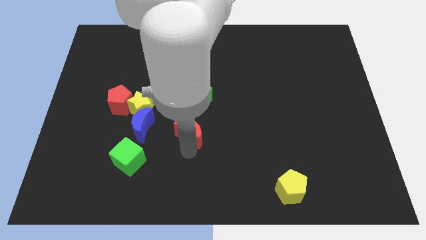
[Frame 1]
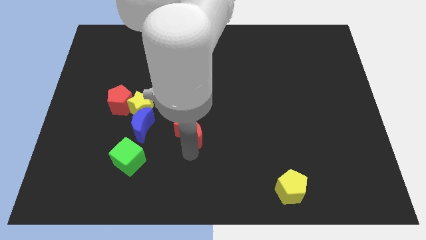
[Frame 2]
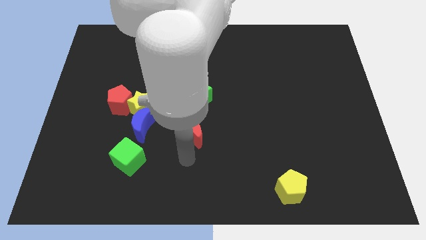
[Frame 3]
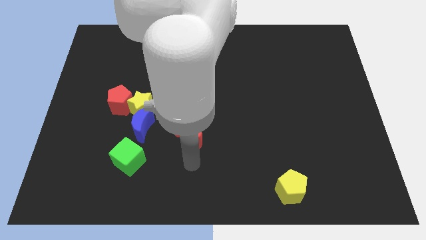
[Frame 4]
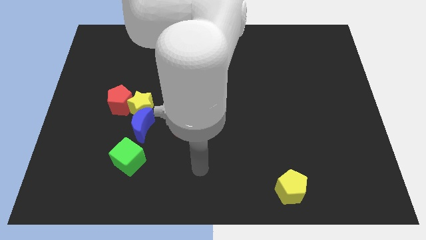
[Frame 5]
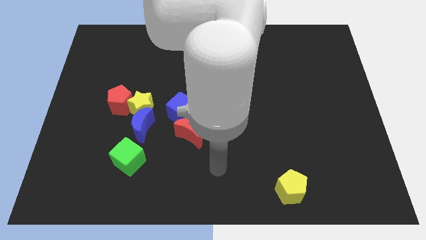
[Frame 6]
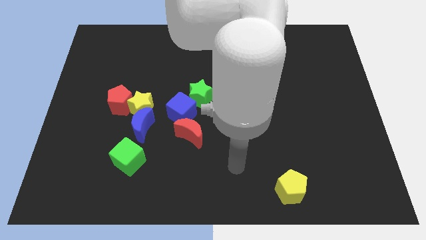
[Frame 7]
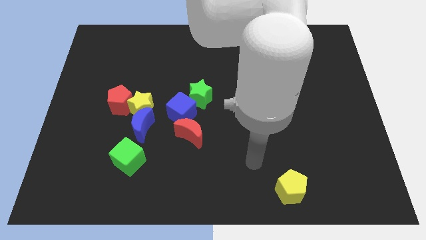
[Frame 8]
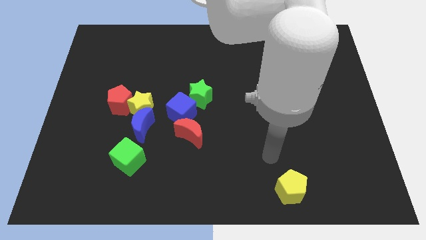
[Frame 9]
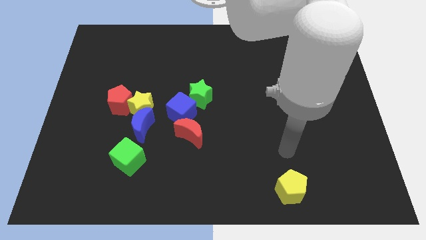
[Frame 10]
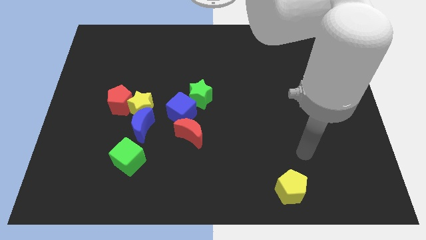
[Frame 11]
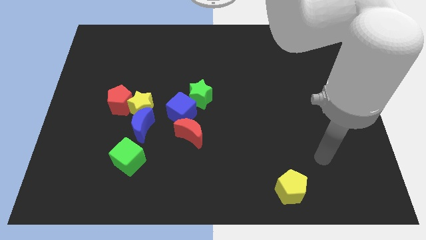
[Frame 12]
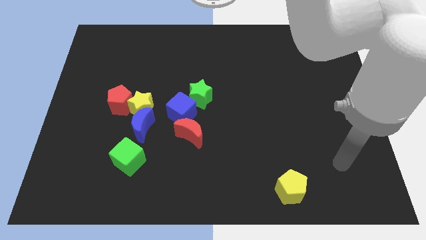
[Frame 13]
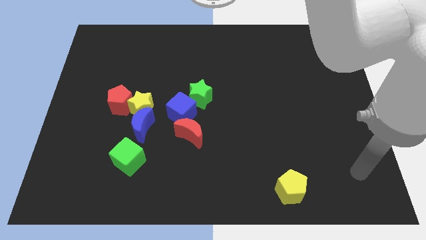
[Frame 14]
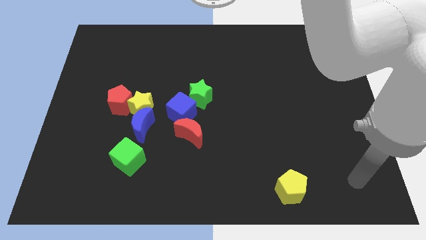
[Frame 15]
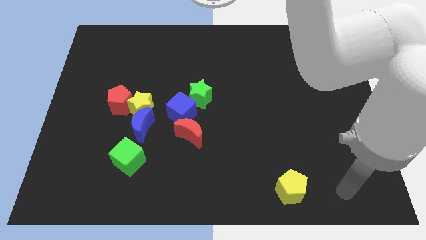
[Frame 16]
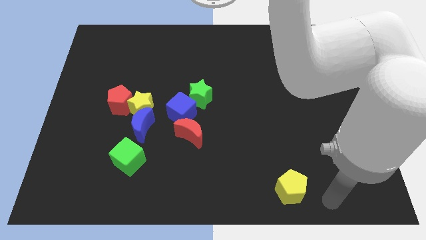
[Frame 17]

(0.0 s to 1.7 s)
move your hand to the right of the yellow pentagon

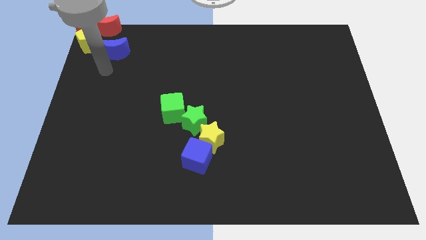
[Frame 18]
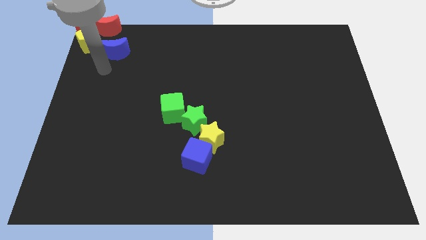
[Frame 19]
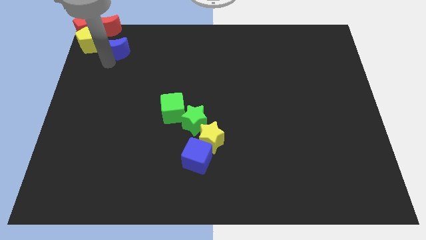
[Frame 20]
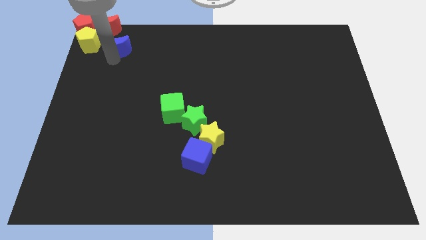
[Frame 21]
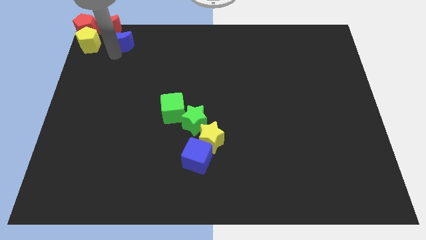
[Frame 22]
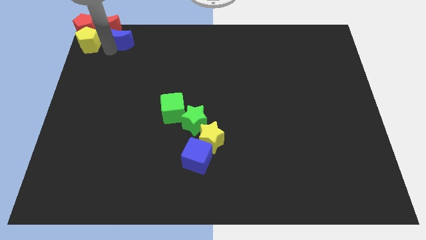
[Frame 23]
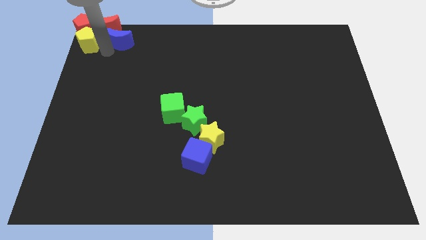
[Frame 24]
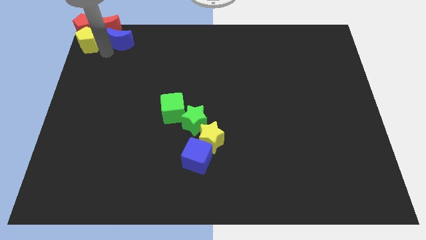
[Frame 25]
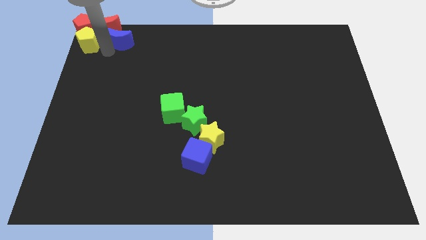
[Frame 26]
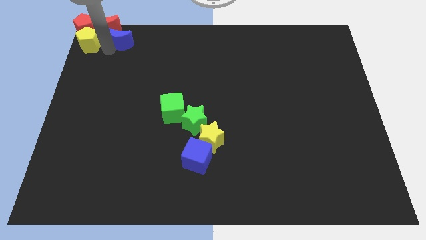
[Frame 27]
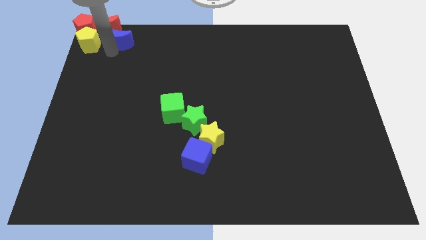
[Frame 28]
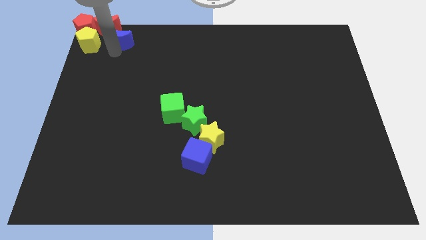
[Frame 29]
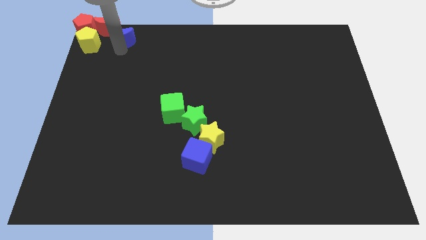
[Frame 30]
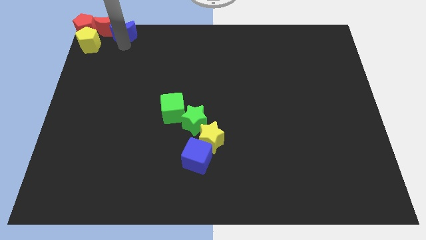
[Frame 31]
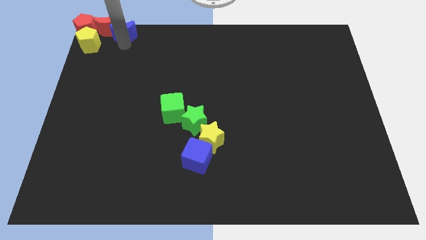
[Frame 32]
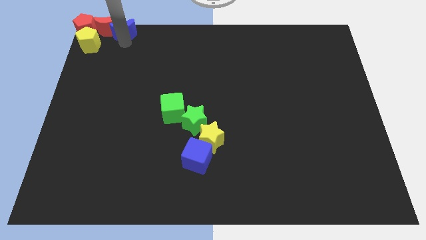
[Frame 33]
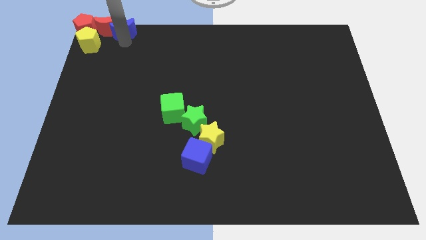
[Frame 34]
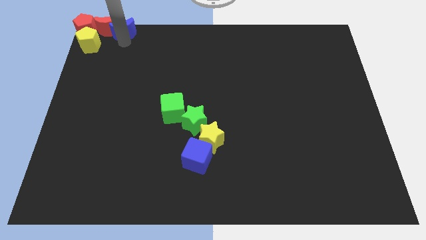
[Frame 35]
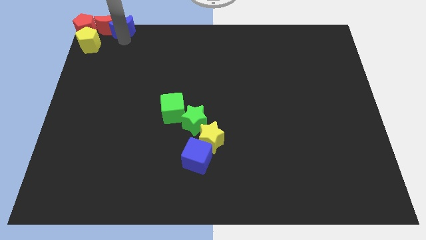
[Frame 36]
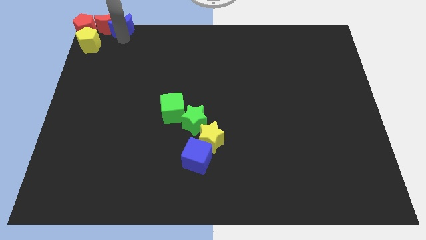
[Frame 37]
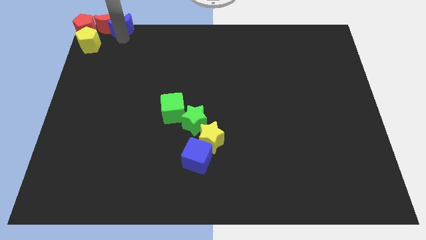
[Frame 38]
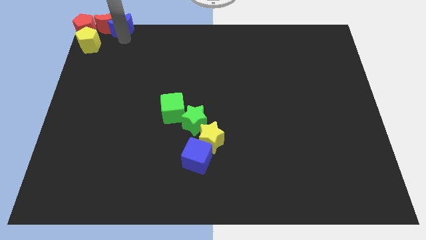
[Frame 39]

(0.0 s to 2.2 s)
push the blue moon into the red moon

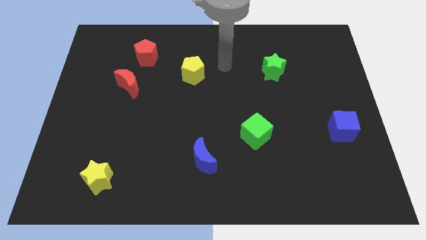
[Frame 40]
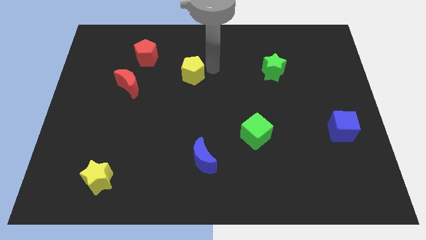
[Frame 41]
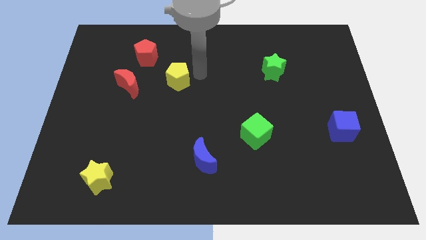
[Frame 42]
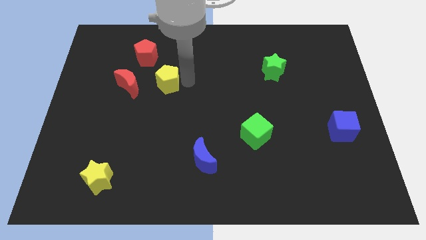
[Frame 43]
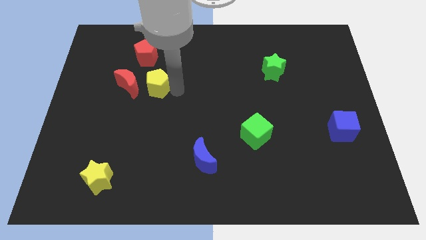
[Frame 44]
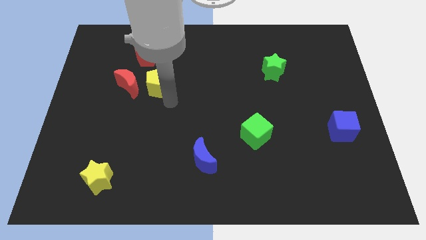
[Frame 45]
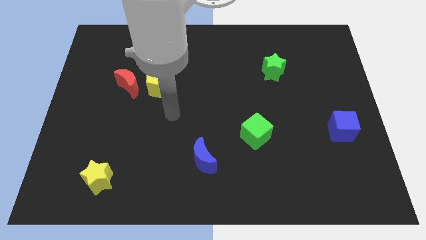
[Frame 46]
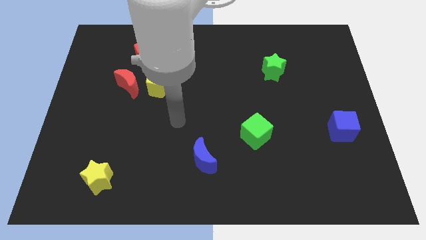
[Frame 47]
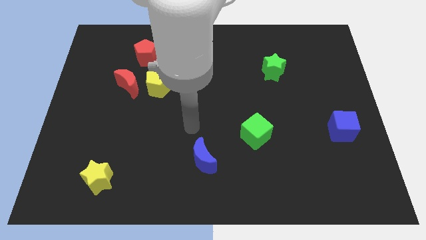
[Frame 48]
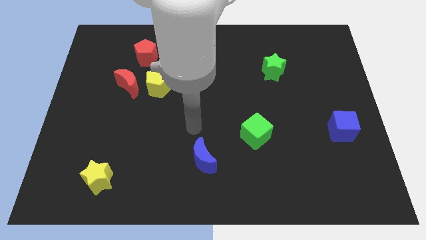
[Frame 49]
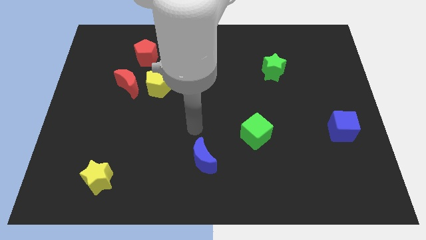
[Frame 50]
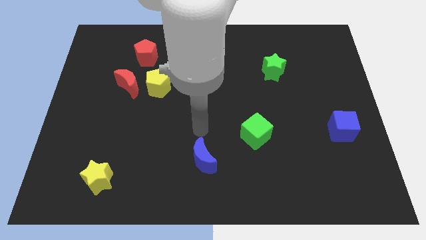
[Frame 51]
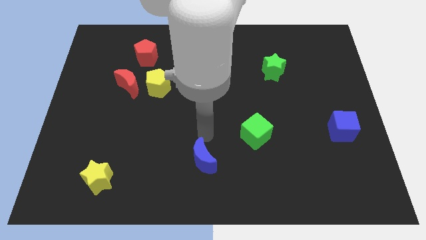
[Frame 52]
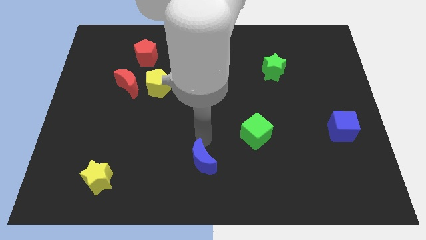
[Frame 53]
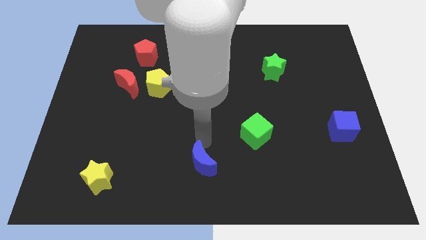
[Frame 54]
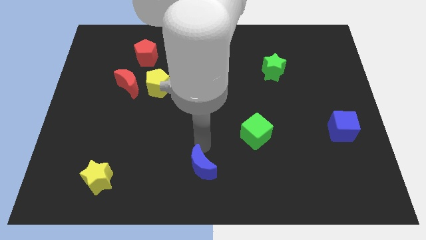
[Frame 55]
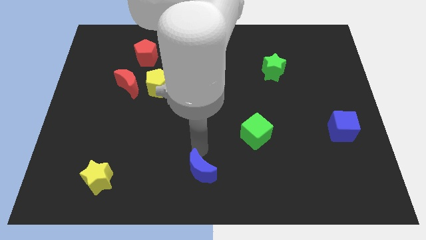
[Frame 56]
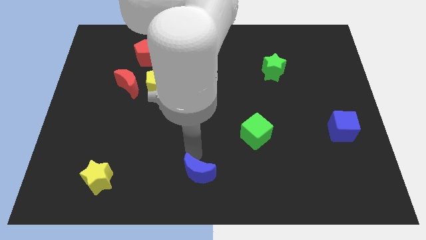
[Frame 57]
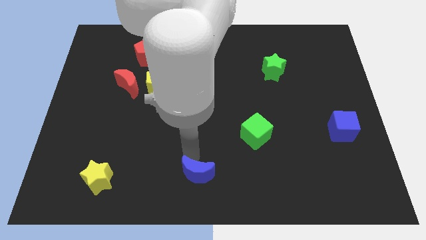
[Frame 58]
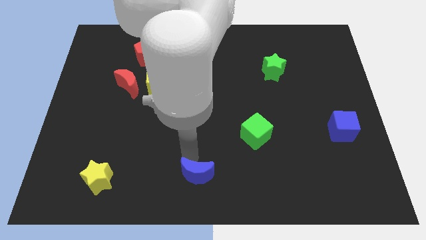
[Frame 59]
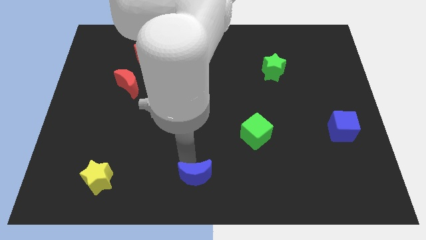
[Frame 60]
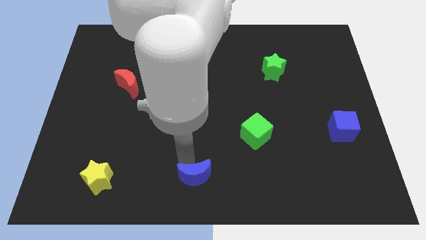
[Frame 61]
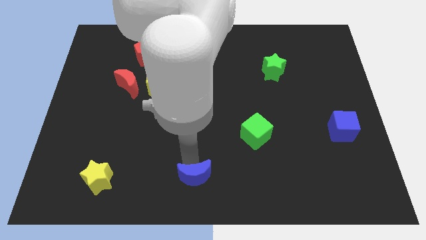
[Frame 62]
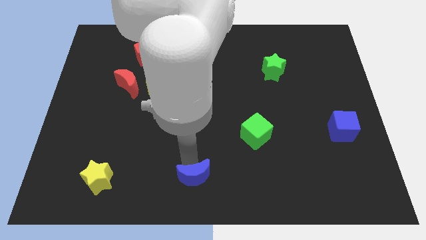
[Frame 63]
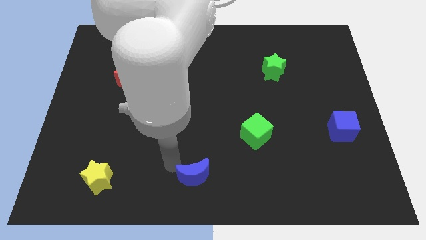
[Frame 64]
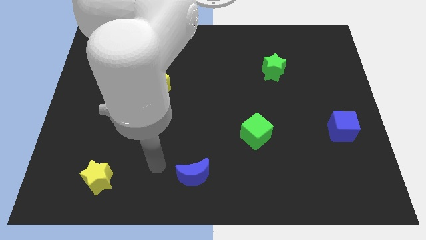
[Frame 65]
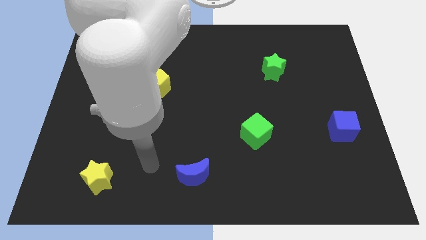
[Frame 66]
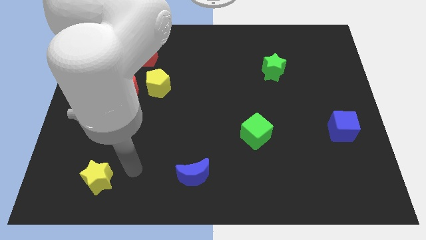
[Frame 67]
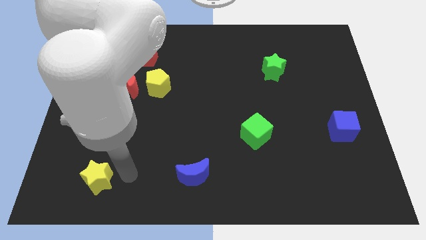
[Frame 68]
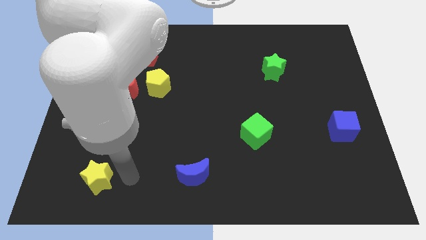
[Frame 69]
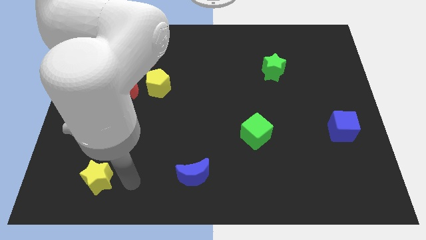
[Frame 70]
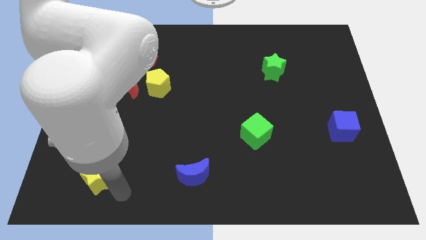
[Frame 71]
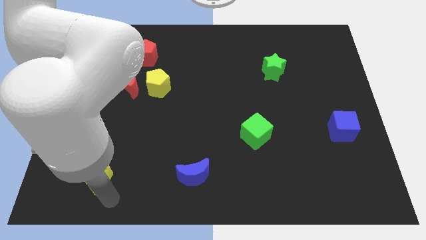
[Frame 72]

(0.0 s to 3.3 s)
push the blue crescent slightly to the bottom

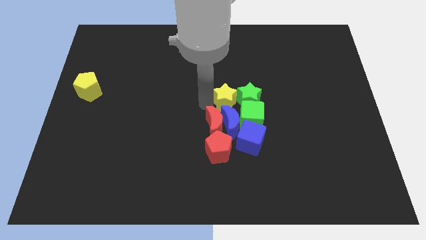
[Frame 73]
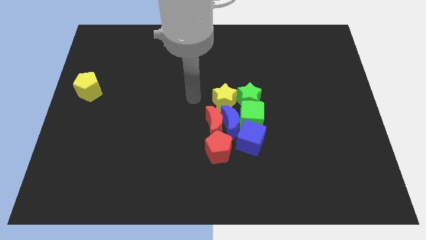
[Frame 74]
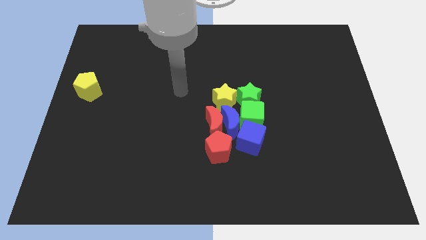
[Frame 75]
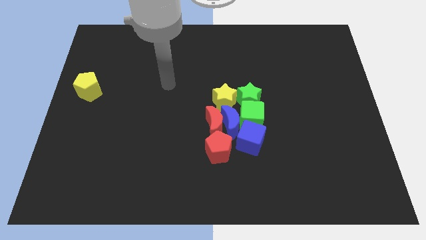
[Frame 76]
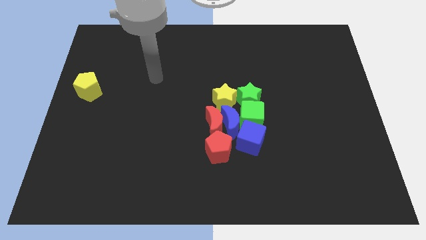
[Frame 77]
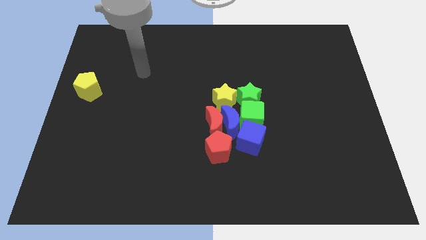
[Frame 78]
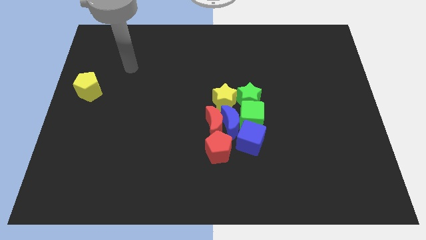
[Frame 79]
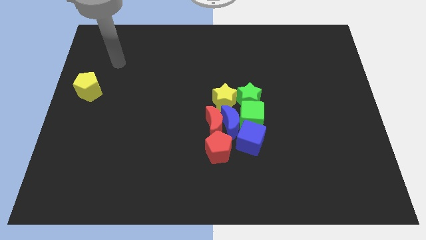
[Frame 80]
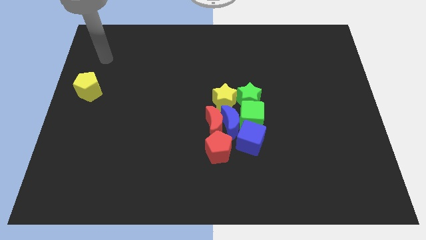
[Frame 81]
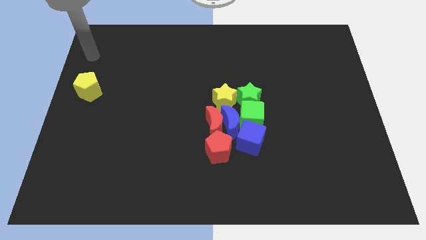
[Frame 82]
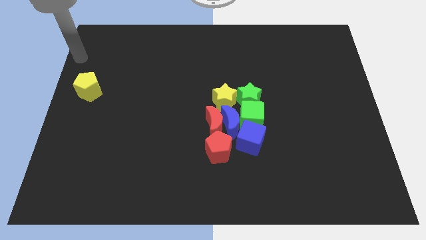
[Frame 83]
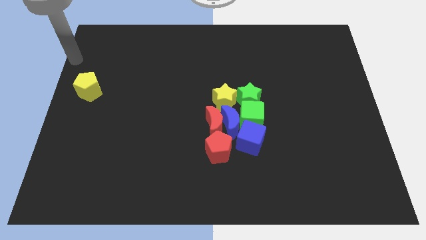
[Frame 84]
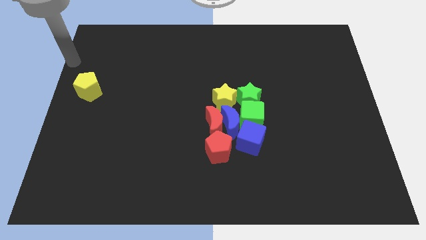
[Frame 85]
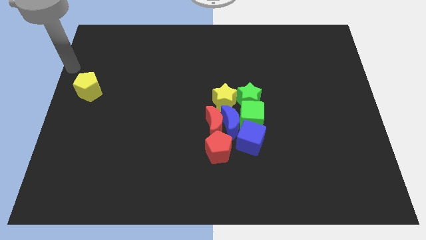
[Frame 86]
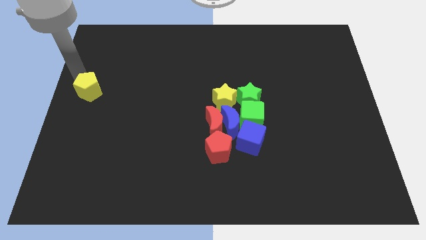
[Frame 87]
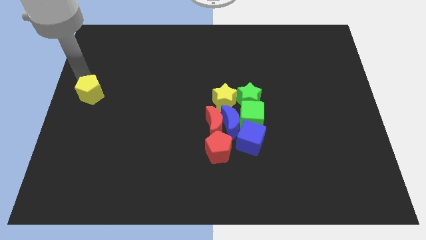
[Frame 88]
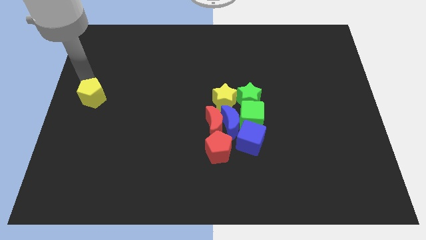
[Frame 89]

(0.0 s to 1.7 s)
move your arm into the yellow pentagon
